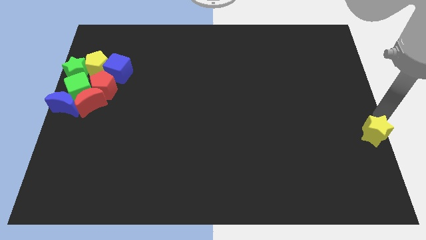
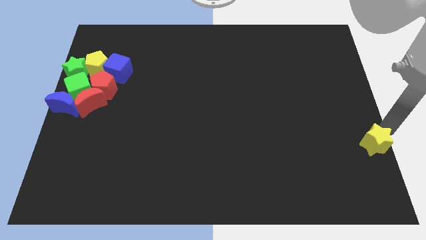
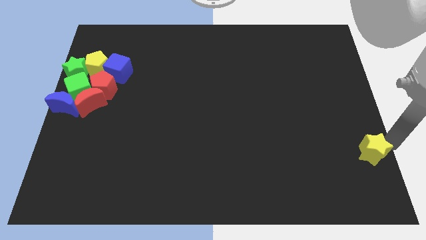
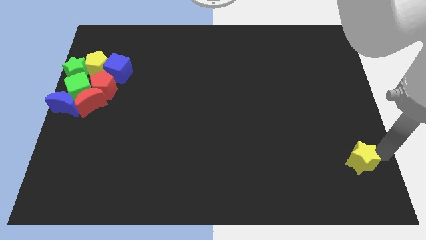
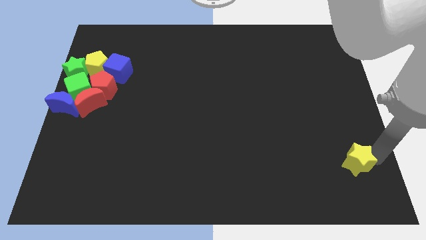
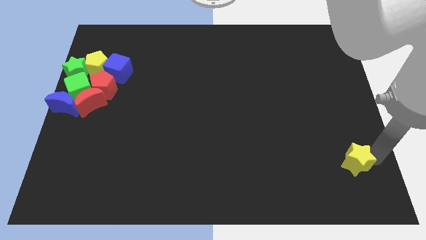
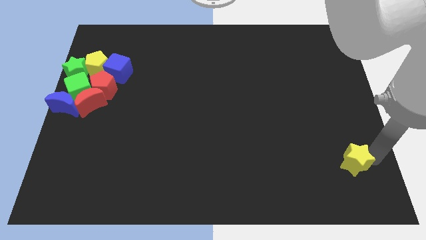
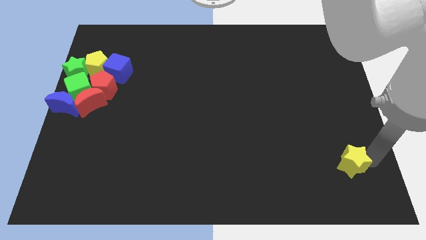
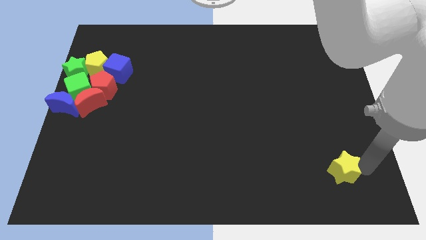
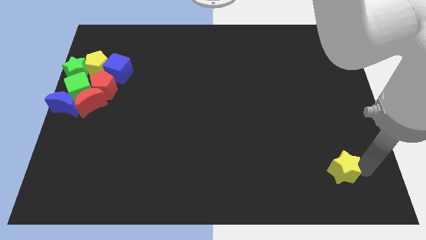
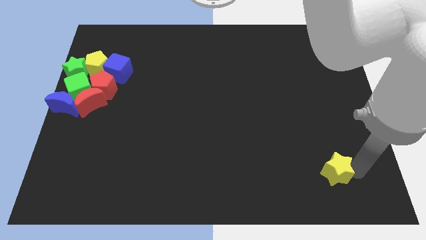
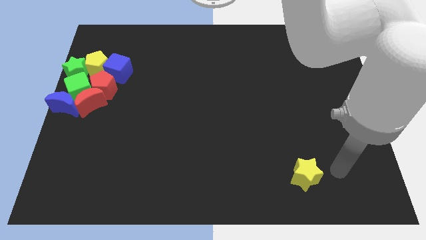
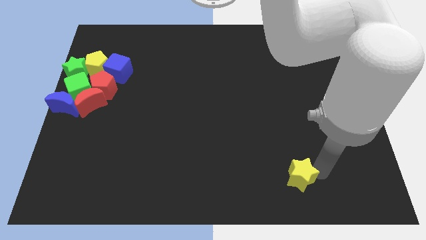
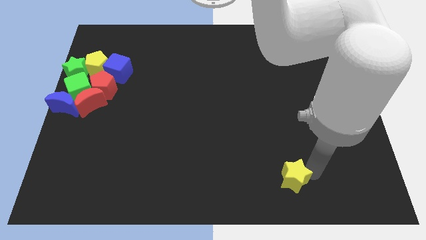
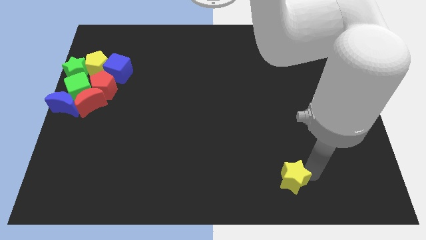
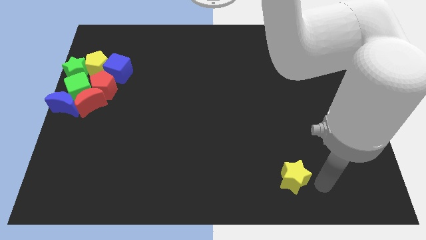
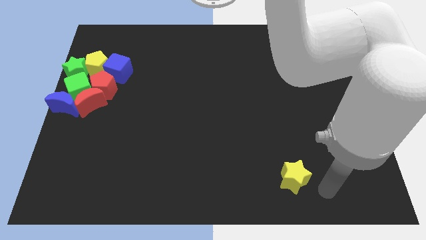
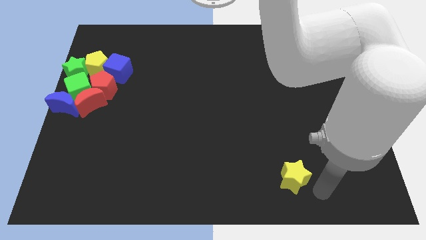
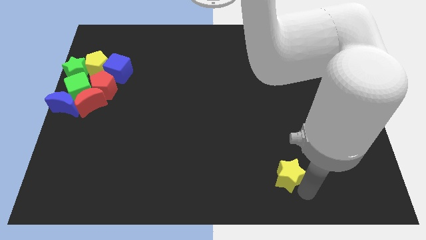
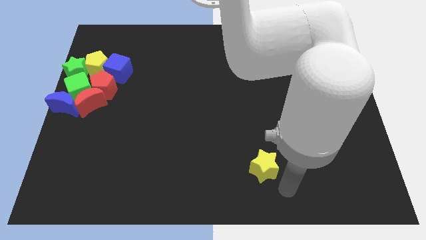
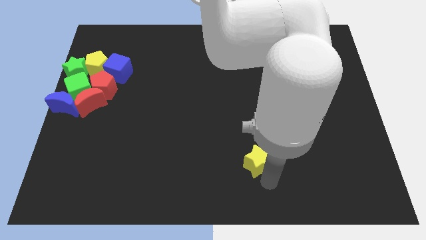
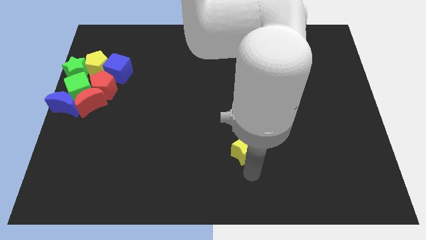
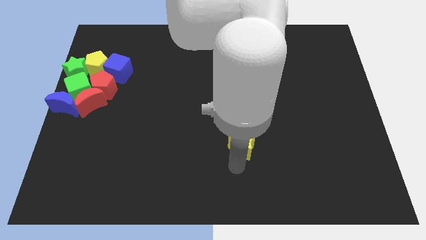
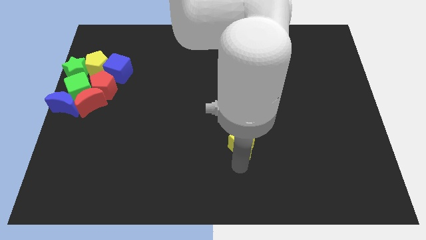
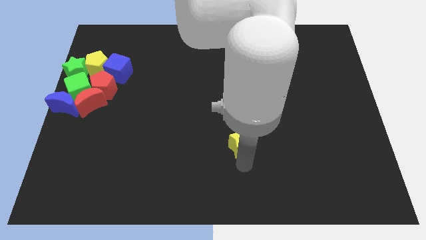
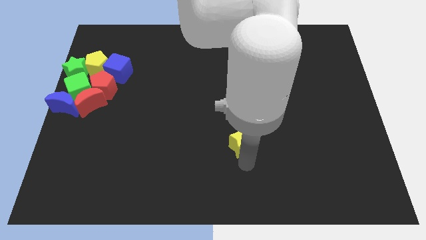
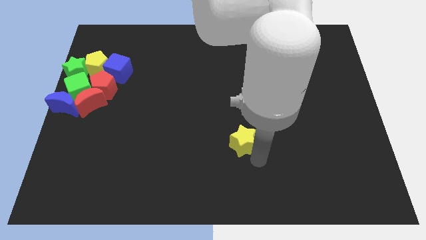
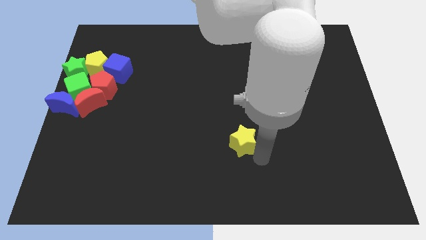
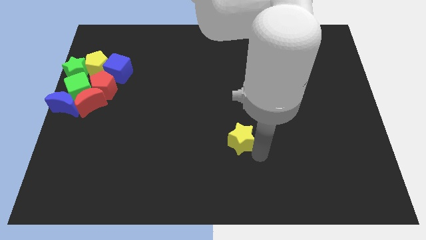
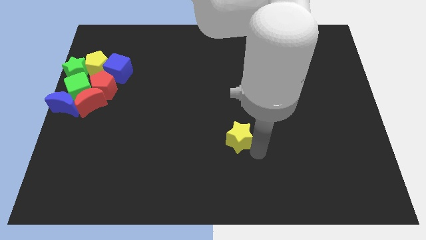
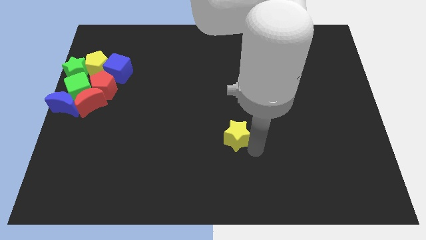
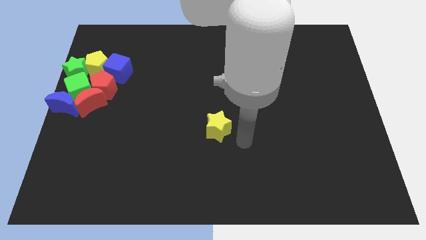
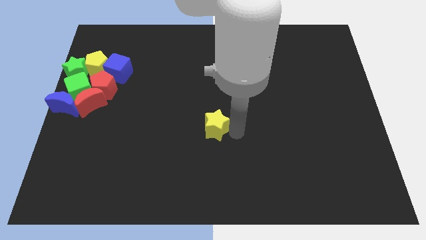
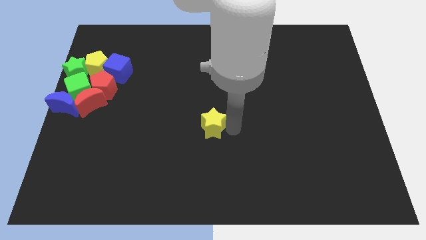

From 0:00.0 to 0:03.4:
move the yellow star towards the center

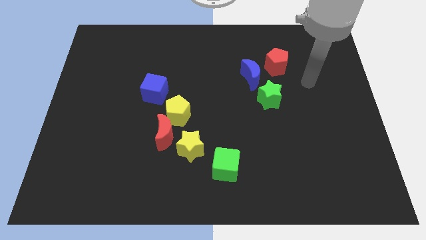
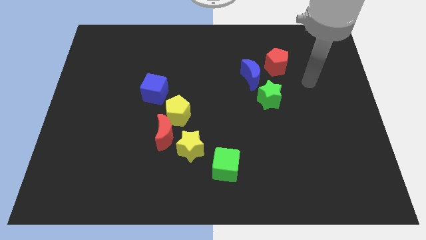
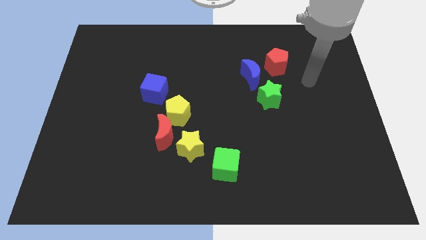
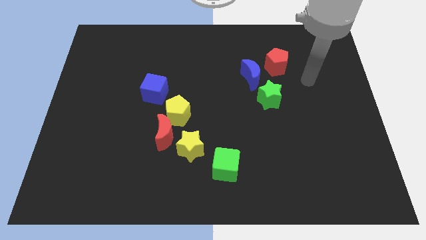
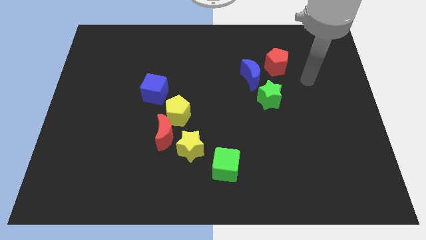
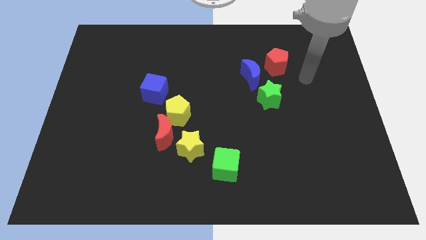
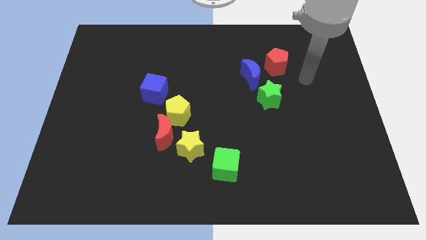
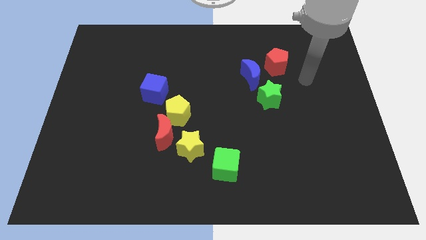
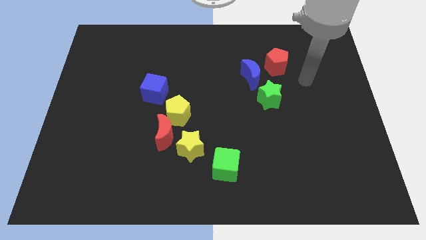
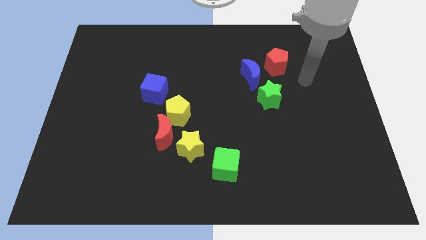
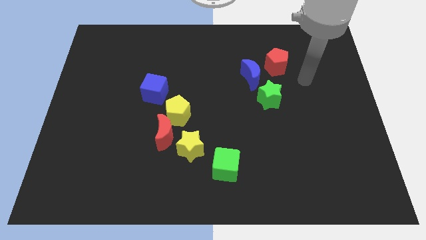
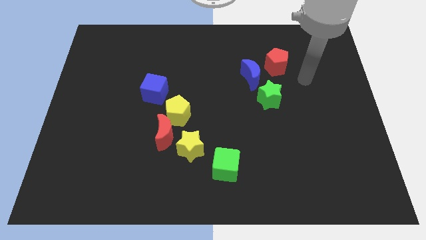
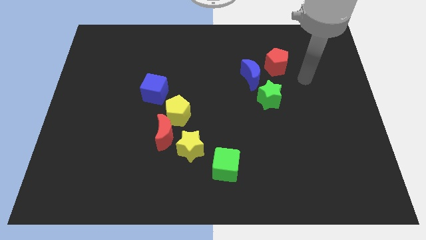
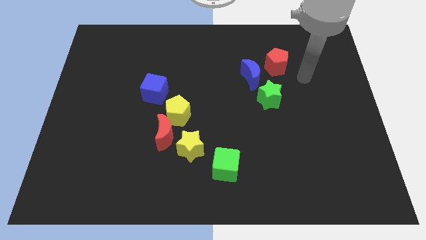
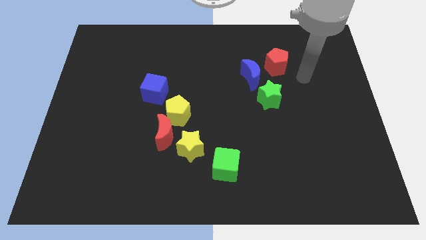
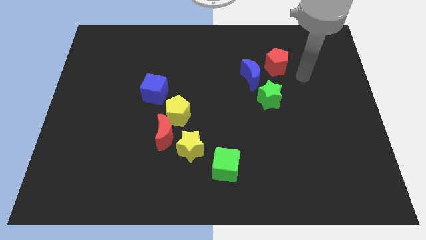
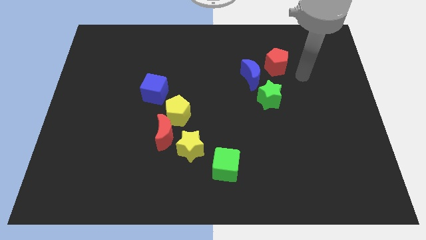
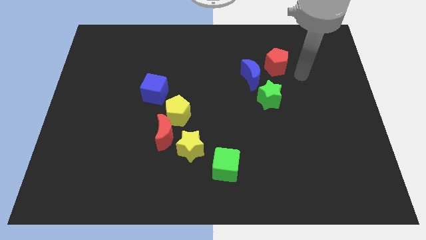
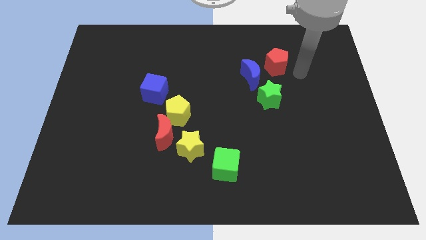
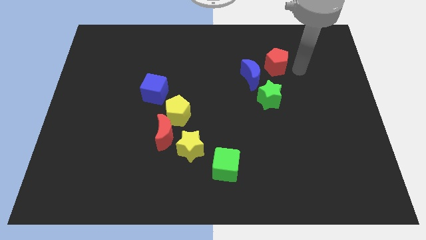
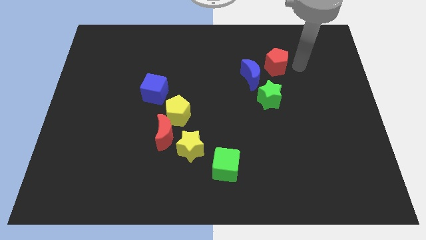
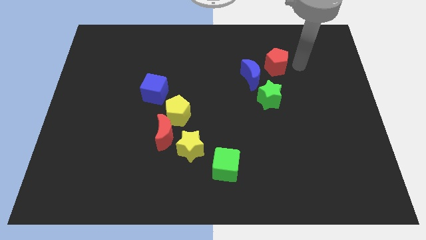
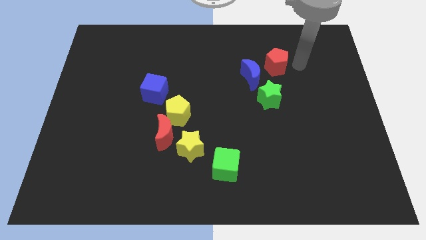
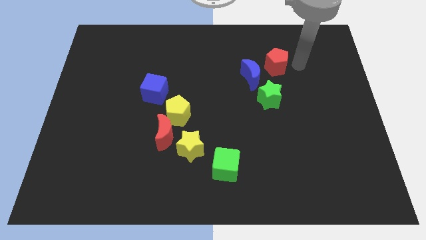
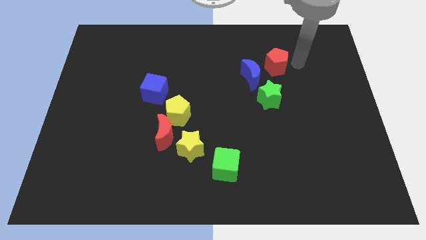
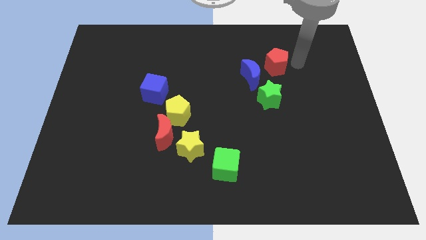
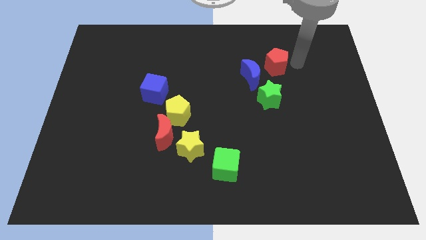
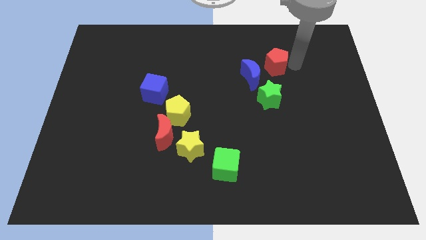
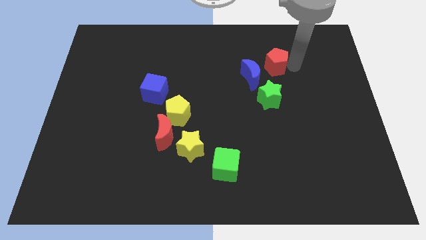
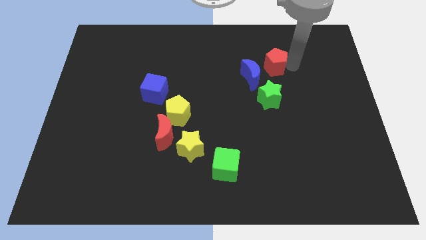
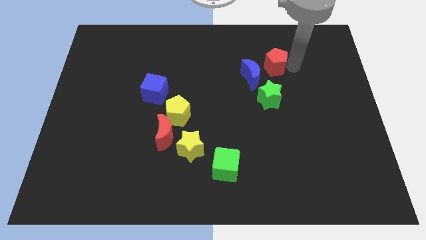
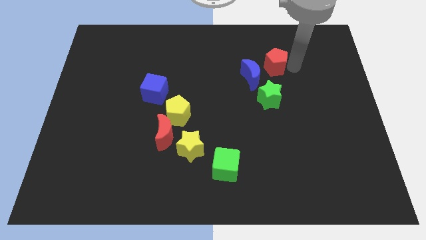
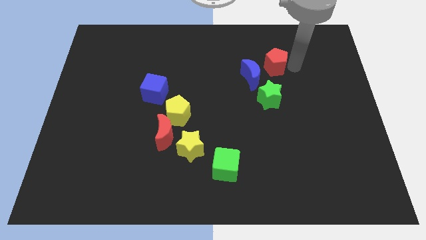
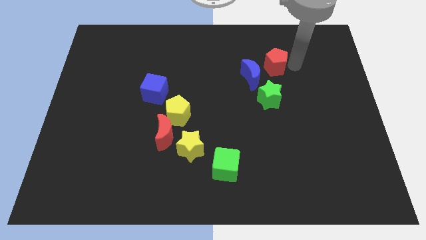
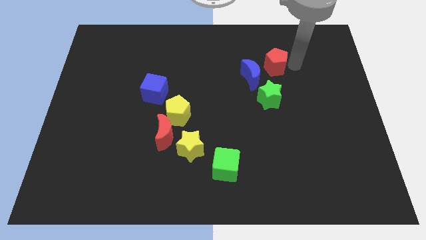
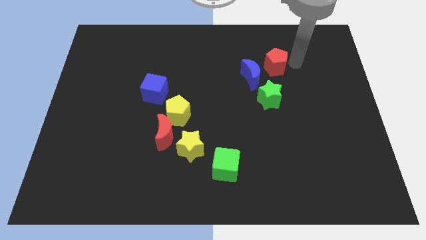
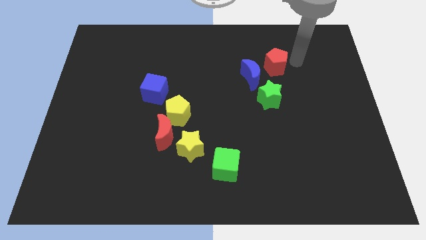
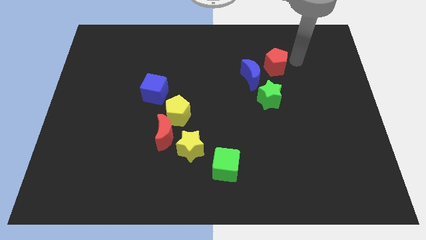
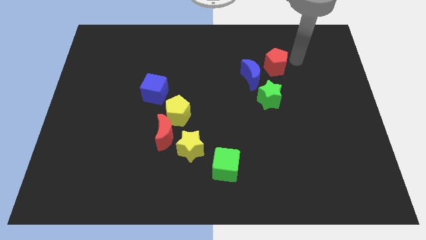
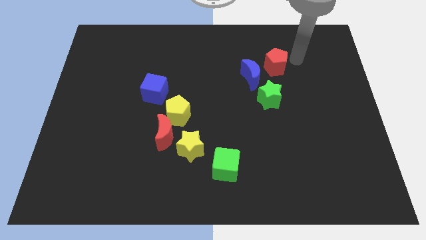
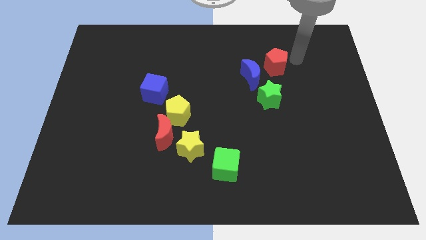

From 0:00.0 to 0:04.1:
slide the red pentagon above the green star

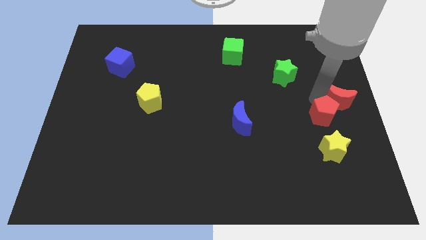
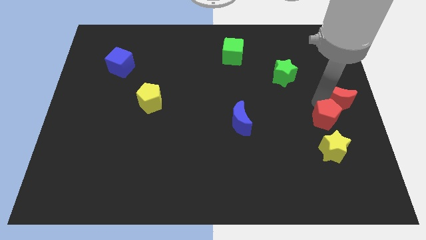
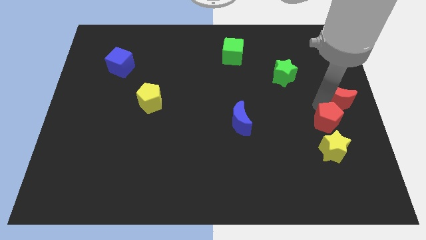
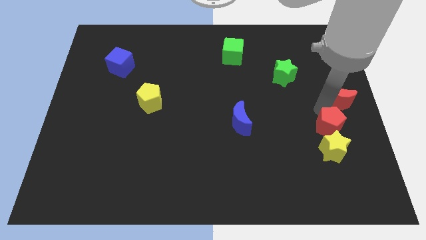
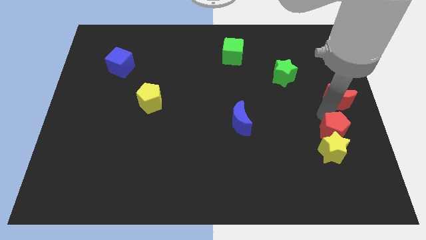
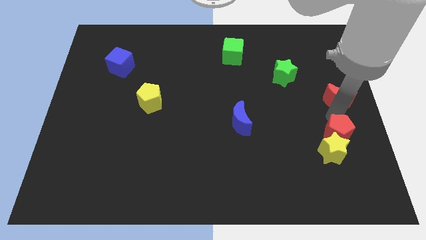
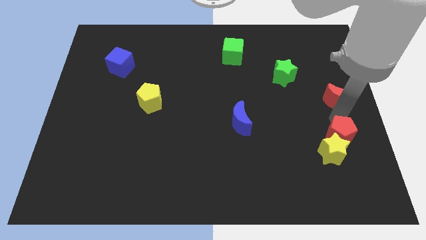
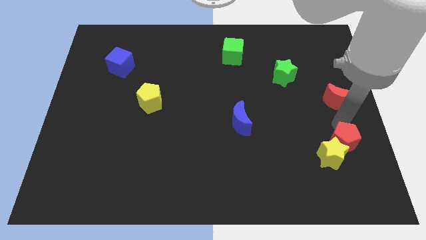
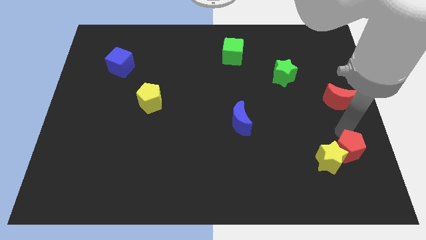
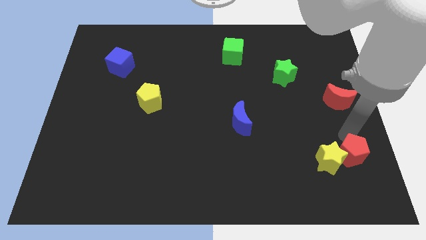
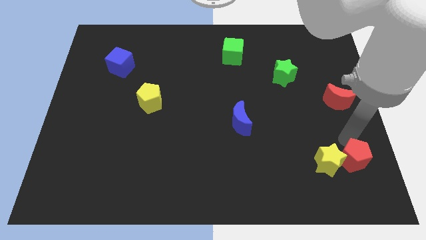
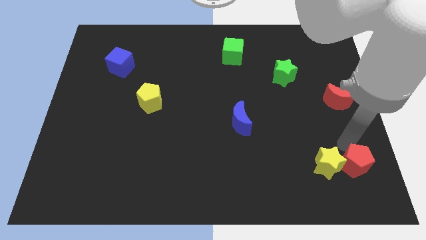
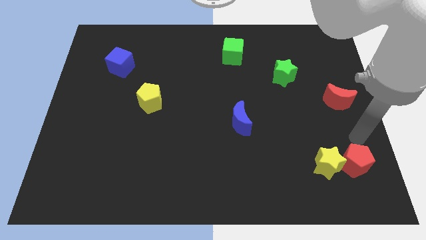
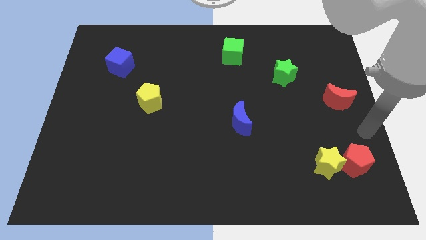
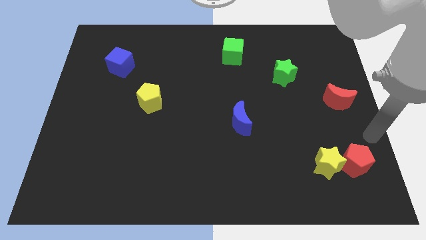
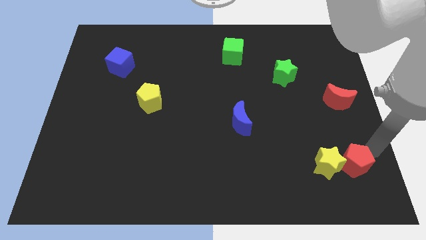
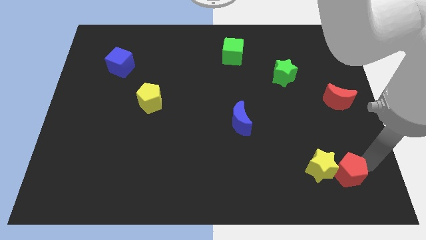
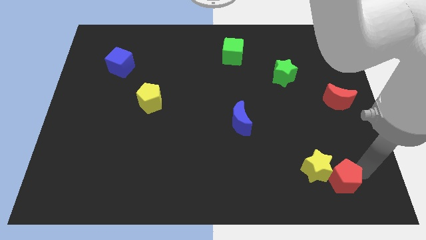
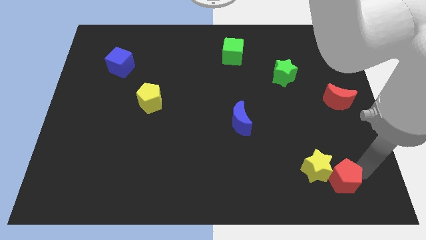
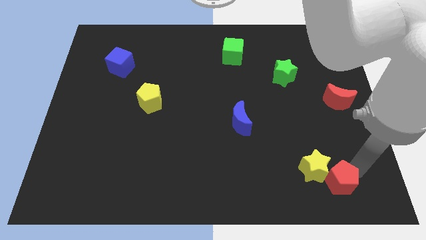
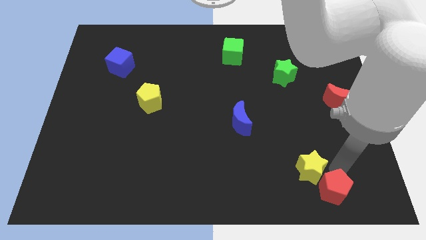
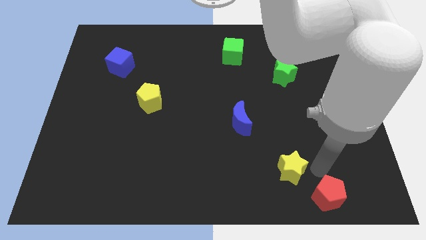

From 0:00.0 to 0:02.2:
place the red pentagon right to the yellow star
